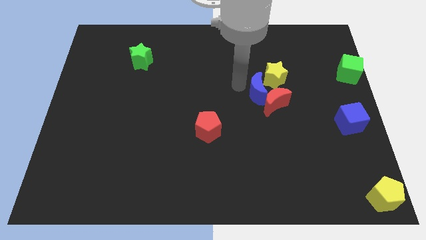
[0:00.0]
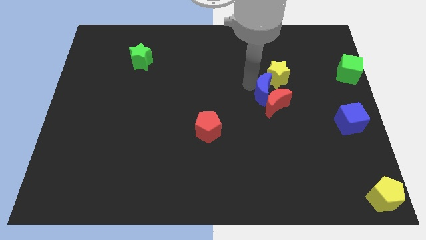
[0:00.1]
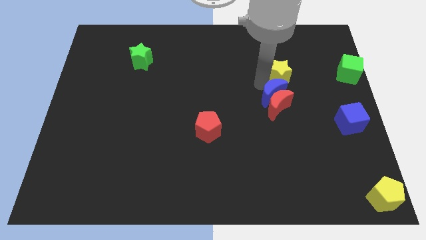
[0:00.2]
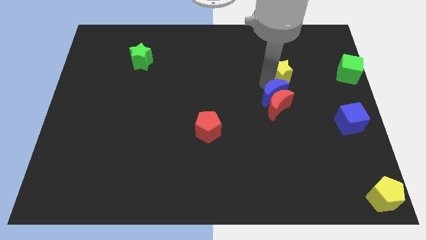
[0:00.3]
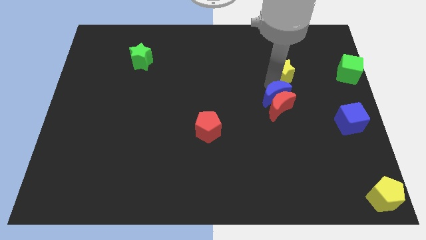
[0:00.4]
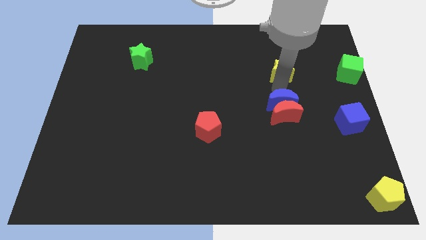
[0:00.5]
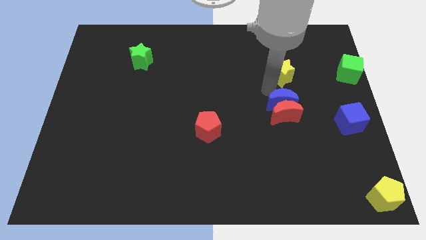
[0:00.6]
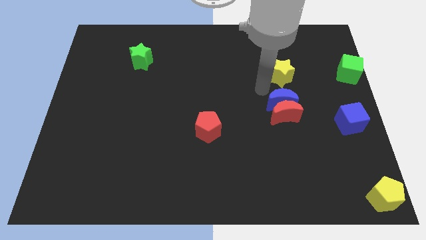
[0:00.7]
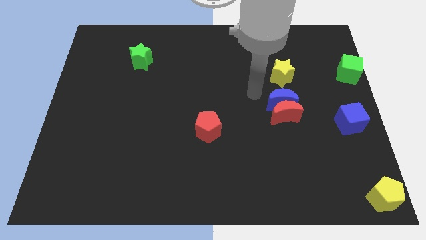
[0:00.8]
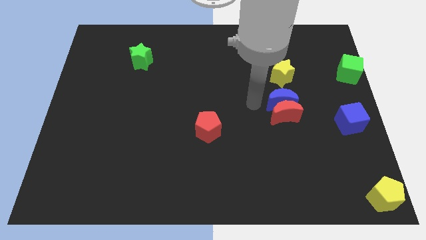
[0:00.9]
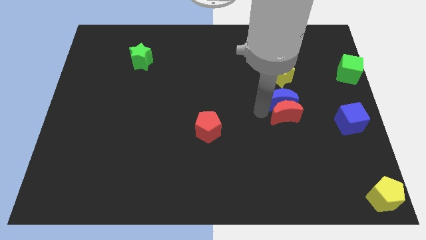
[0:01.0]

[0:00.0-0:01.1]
place the blue moon to the top of the red moon

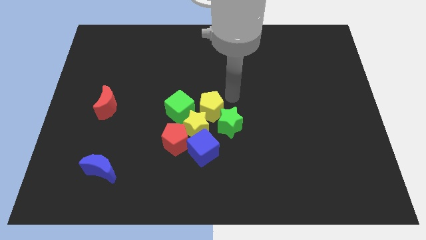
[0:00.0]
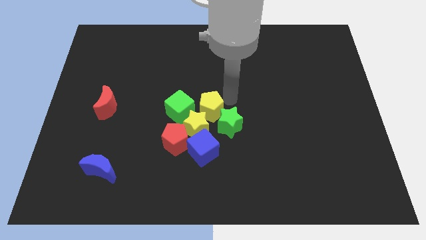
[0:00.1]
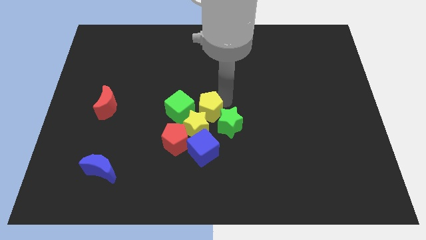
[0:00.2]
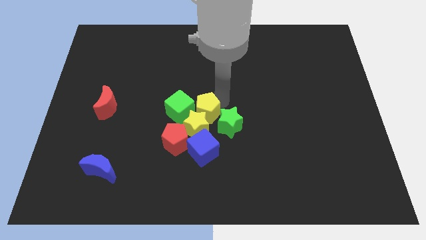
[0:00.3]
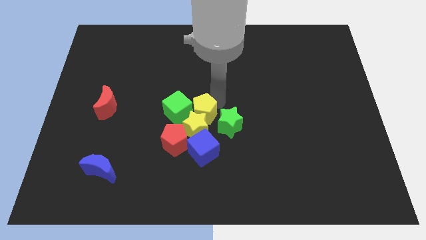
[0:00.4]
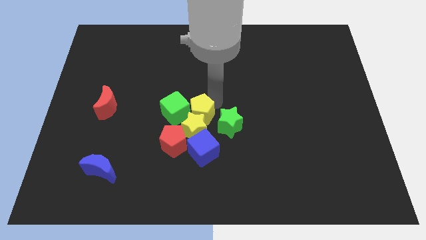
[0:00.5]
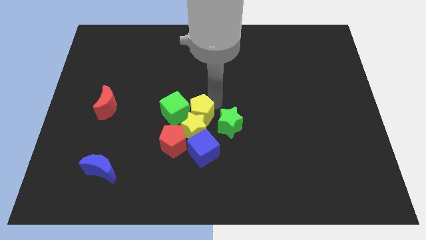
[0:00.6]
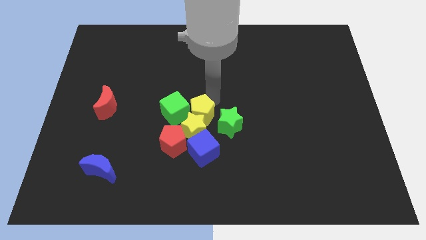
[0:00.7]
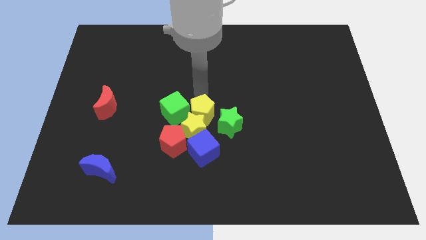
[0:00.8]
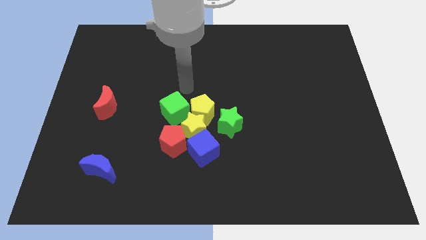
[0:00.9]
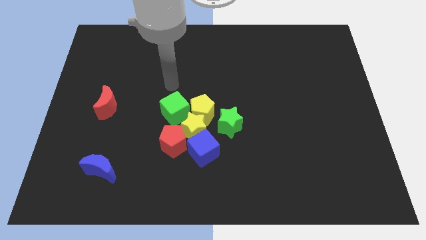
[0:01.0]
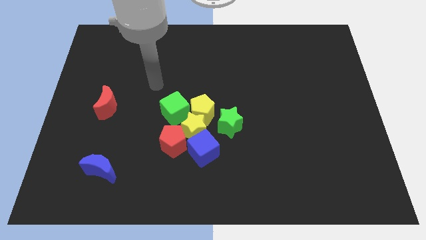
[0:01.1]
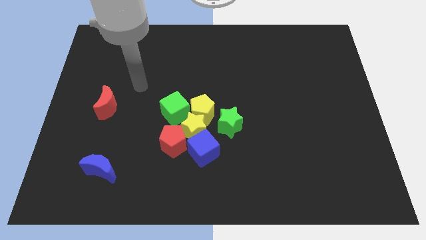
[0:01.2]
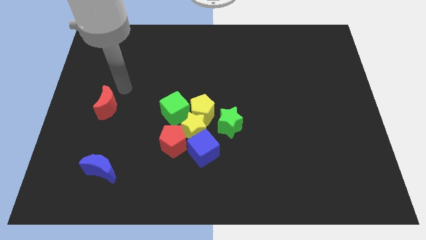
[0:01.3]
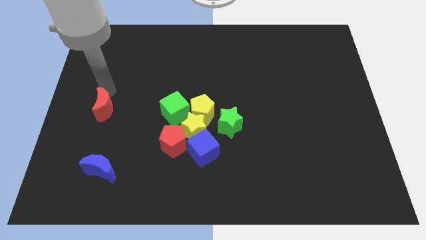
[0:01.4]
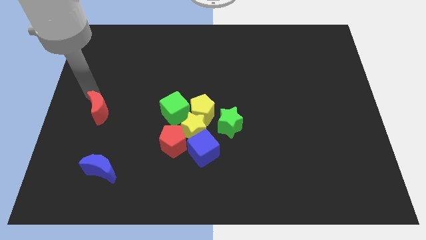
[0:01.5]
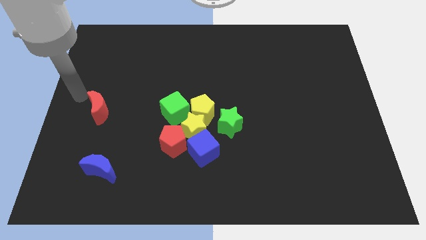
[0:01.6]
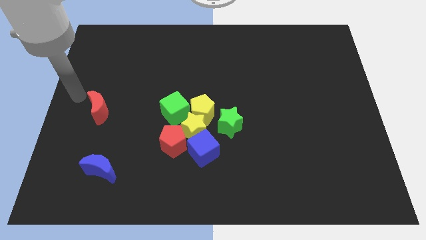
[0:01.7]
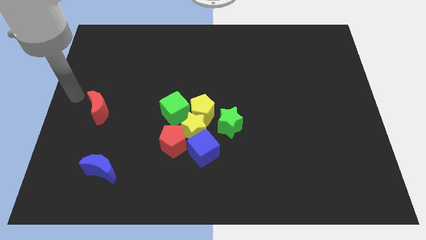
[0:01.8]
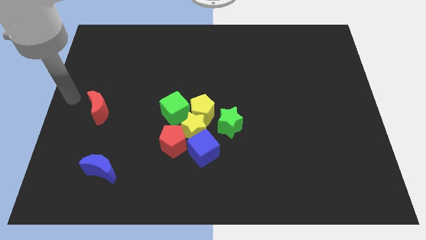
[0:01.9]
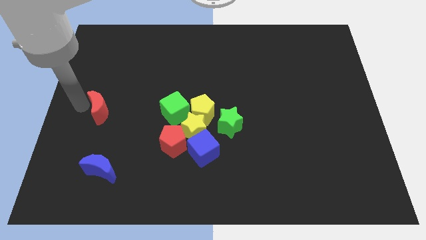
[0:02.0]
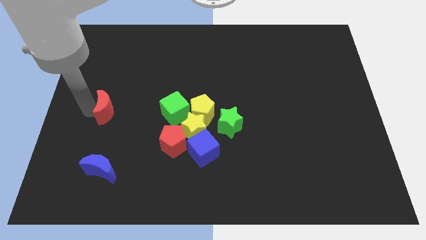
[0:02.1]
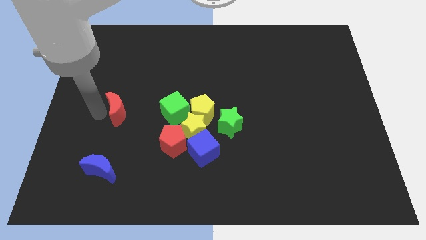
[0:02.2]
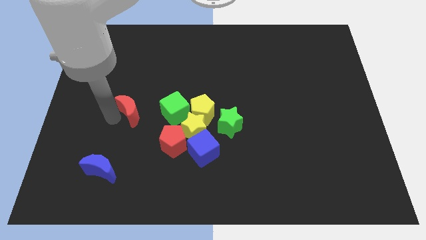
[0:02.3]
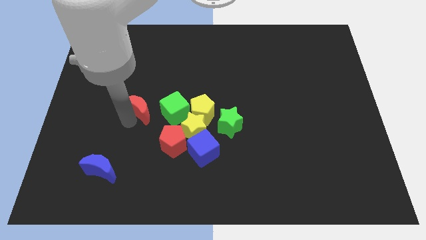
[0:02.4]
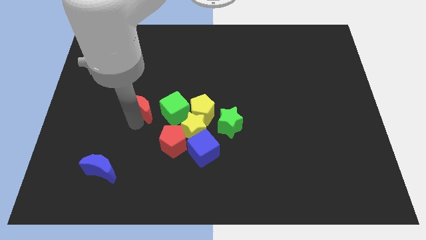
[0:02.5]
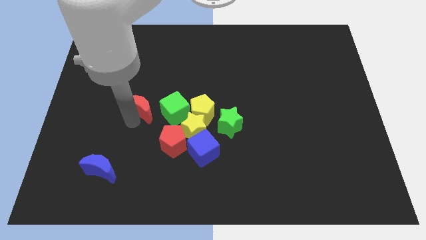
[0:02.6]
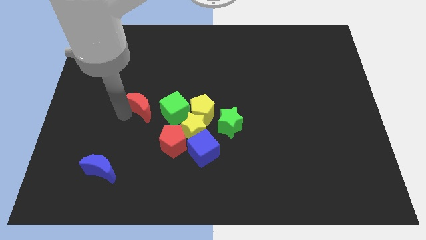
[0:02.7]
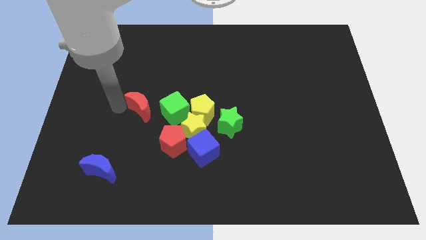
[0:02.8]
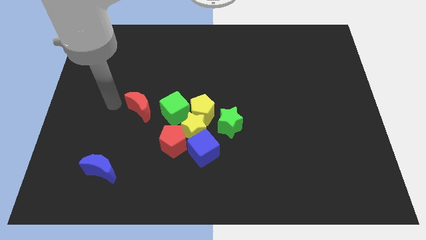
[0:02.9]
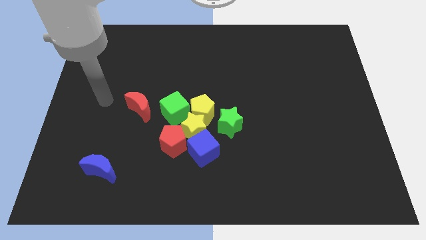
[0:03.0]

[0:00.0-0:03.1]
push red moon towards left side of the board

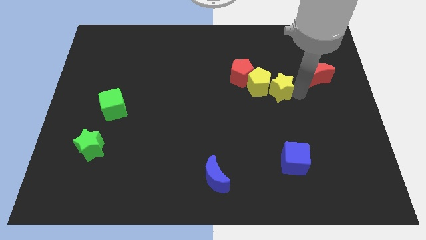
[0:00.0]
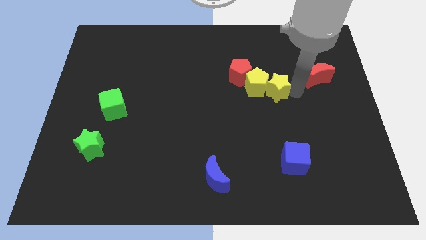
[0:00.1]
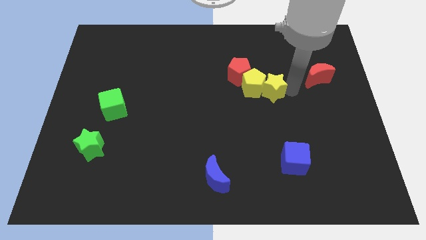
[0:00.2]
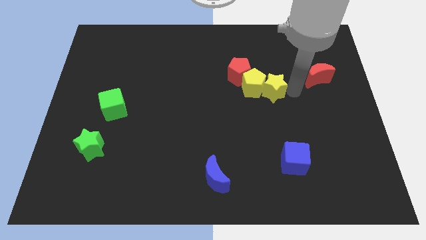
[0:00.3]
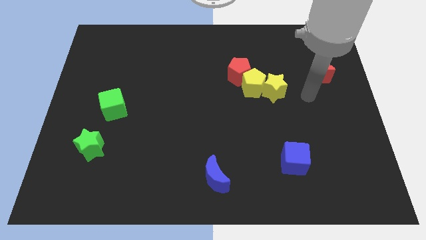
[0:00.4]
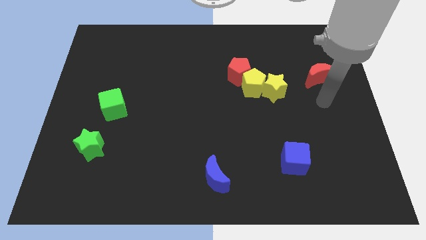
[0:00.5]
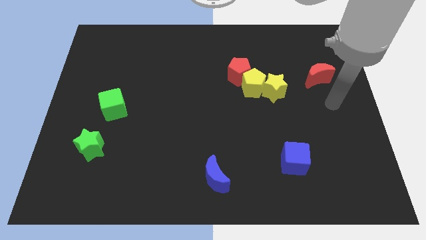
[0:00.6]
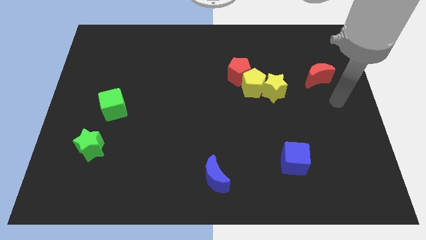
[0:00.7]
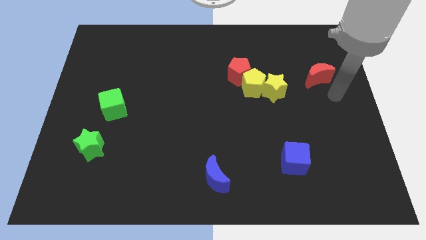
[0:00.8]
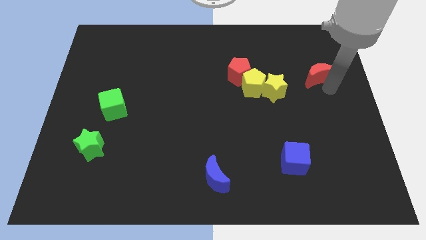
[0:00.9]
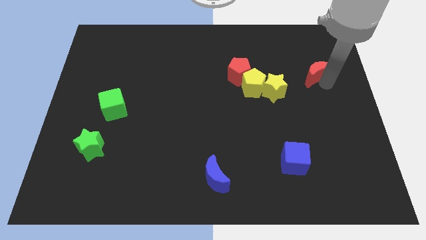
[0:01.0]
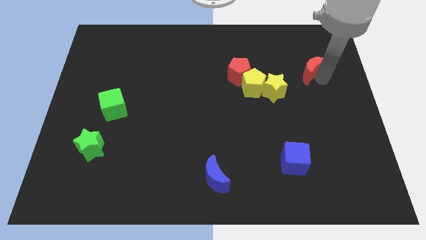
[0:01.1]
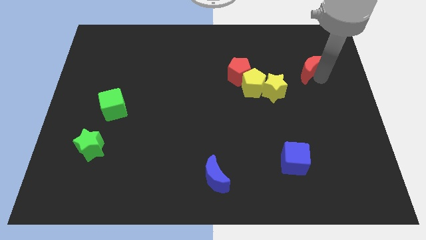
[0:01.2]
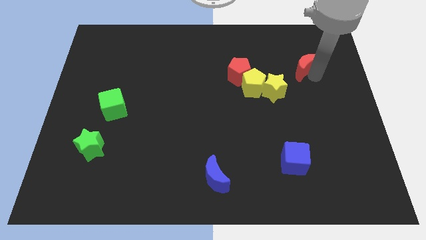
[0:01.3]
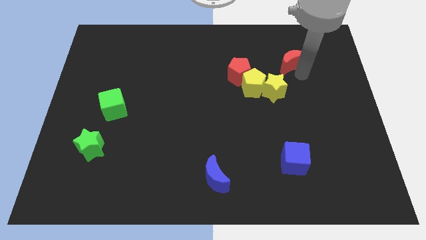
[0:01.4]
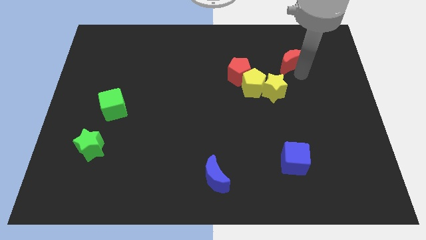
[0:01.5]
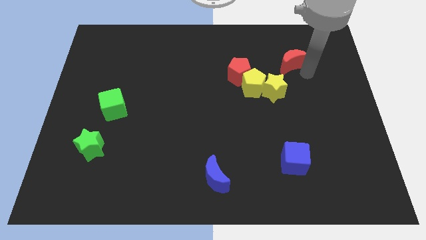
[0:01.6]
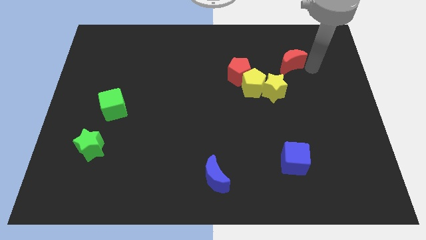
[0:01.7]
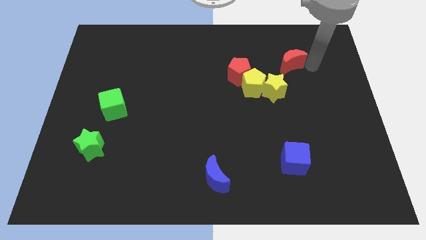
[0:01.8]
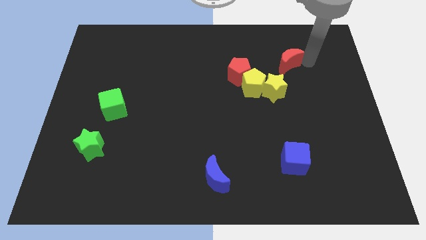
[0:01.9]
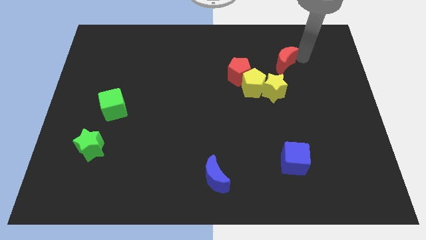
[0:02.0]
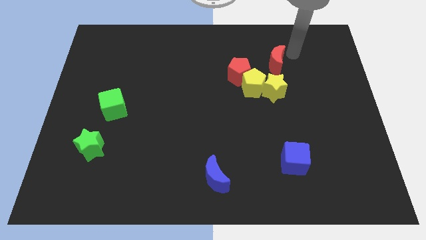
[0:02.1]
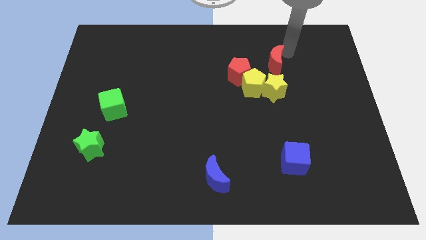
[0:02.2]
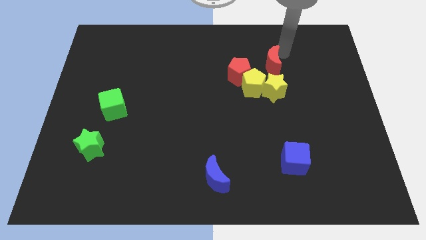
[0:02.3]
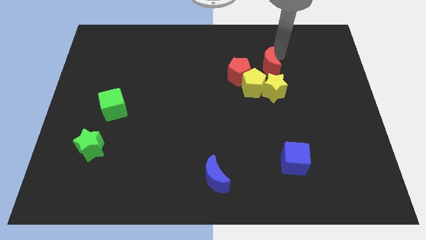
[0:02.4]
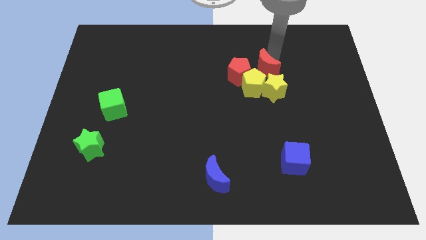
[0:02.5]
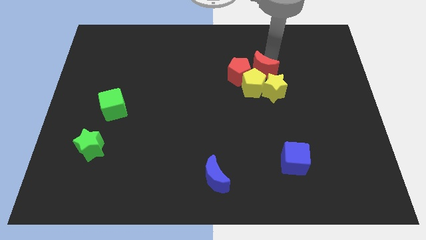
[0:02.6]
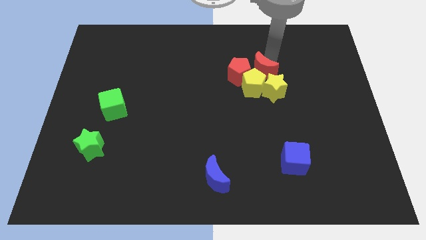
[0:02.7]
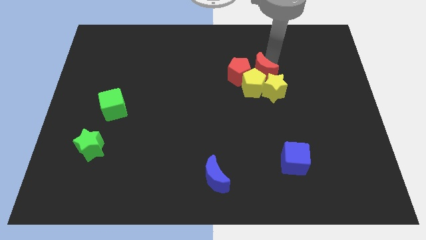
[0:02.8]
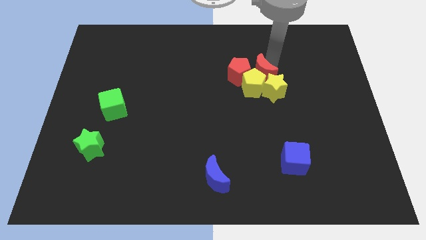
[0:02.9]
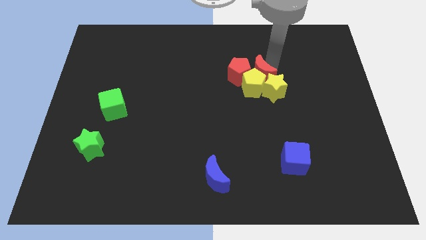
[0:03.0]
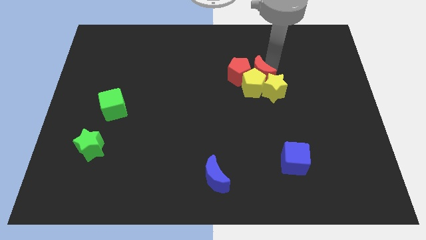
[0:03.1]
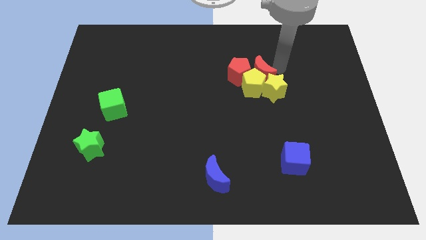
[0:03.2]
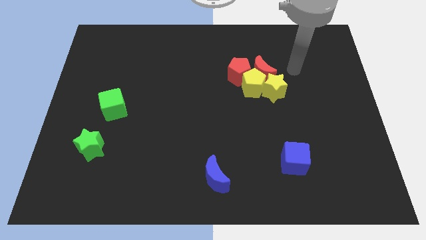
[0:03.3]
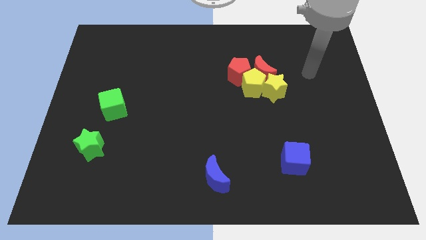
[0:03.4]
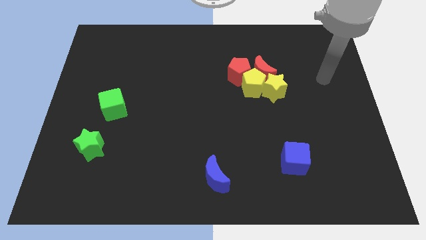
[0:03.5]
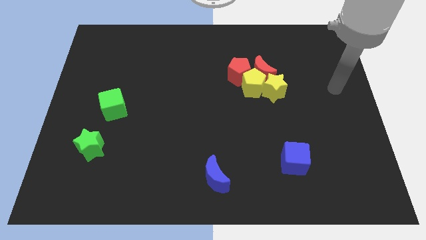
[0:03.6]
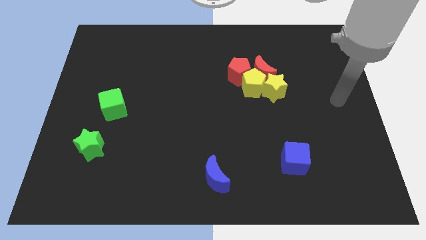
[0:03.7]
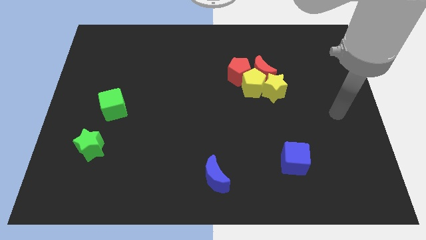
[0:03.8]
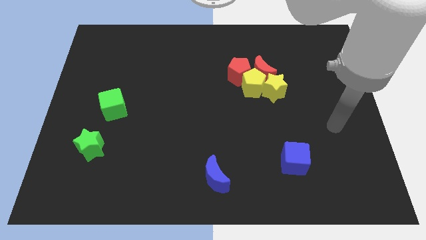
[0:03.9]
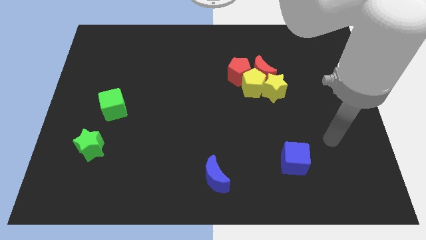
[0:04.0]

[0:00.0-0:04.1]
place the red moon to the right side of red pentagon

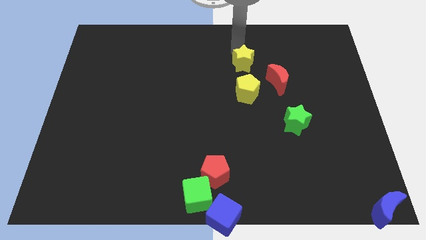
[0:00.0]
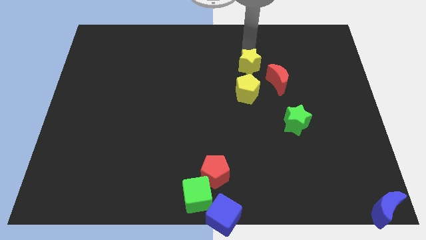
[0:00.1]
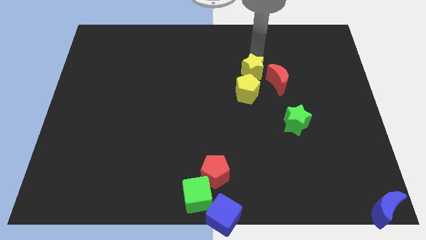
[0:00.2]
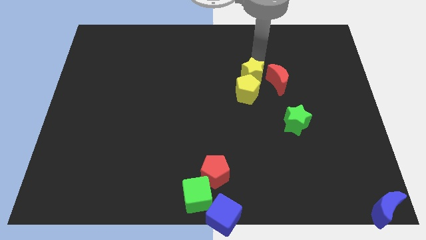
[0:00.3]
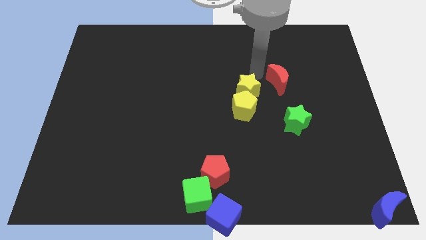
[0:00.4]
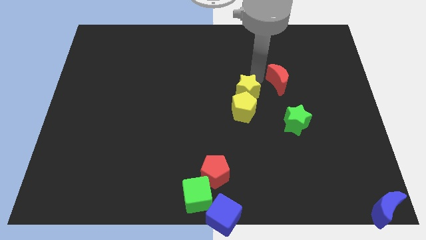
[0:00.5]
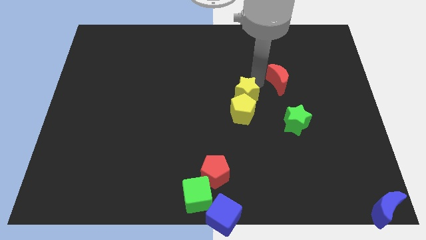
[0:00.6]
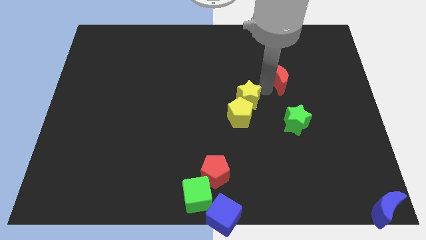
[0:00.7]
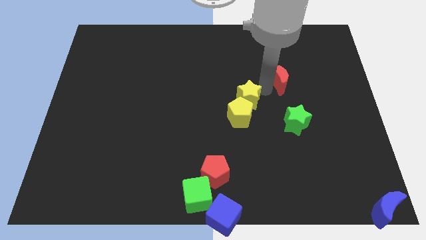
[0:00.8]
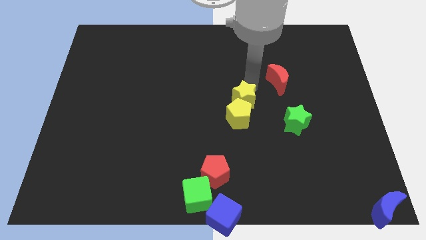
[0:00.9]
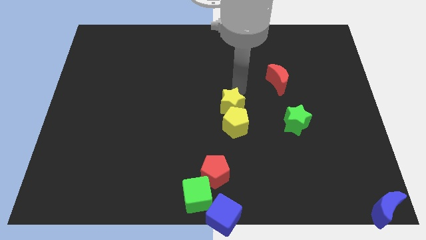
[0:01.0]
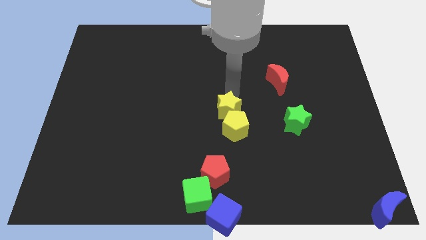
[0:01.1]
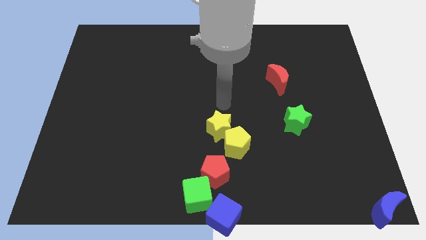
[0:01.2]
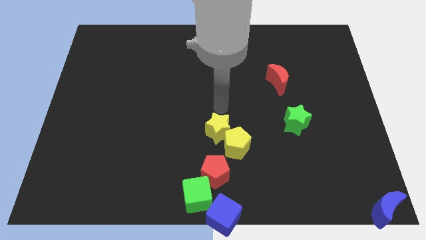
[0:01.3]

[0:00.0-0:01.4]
push the yellow pentagon with the yellow star towards the bottom center of the board
